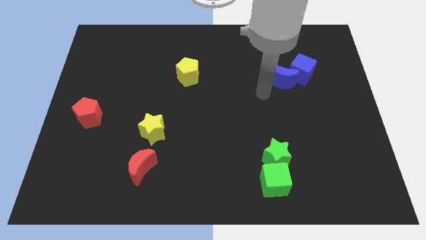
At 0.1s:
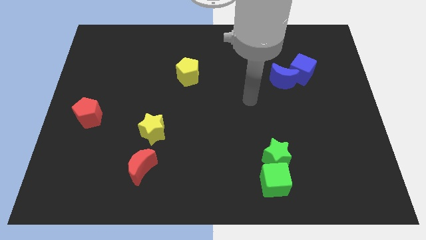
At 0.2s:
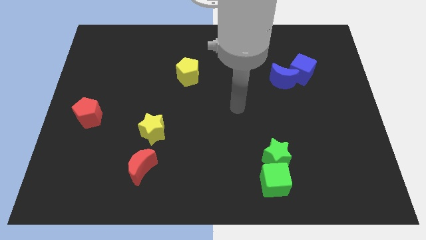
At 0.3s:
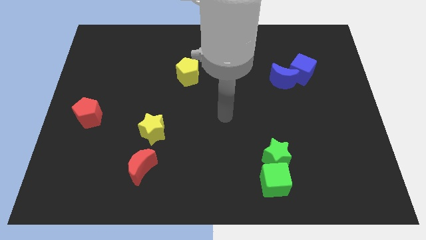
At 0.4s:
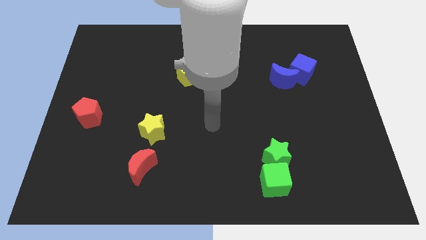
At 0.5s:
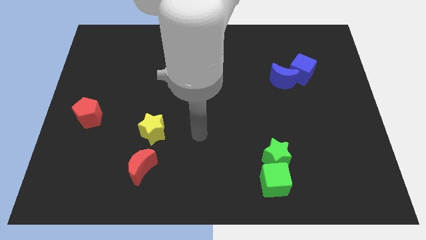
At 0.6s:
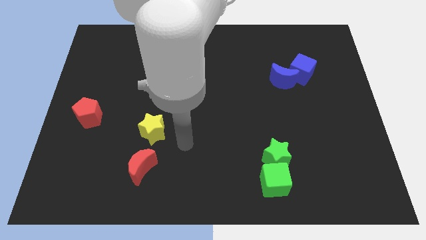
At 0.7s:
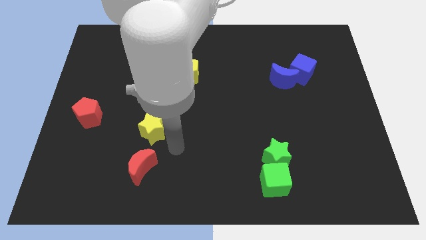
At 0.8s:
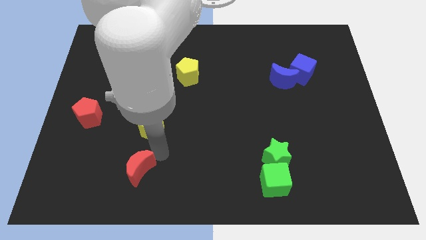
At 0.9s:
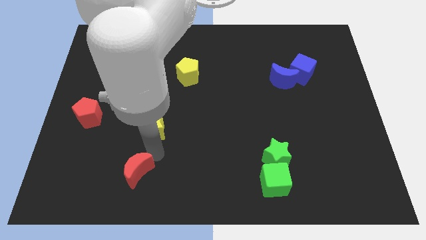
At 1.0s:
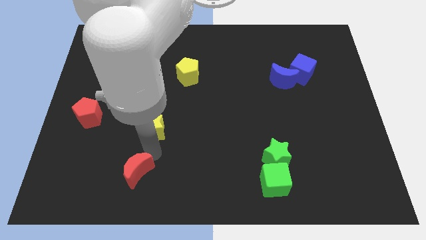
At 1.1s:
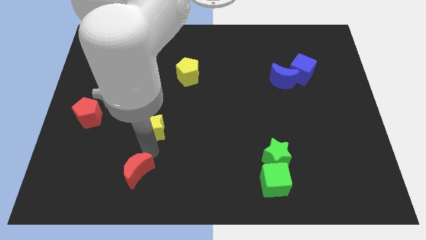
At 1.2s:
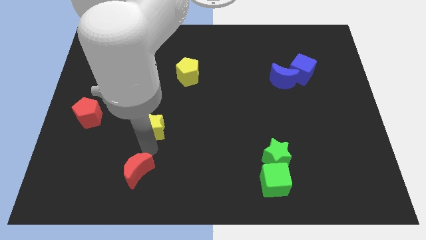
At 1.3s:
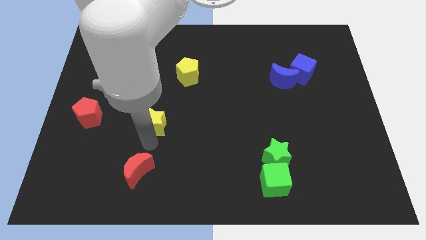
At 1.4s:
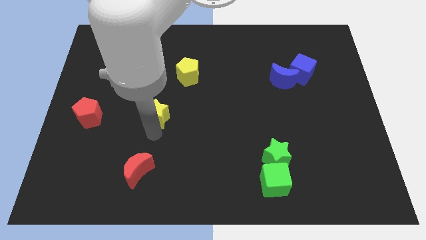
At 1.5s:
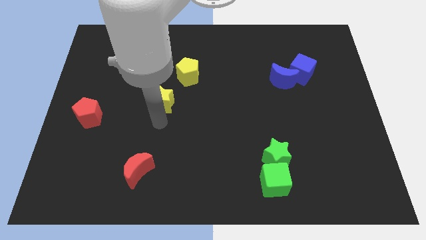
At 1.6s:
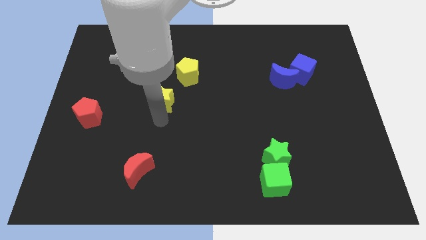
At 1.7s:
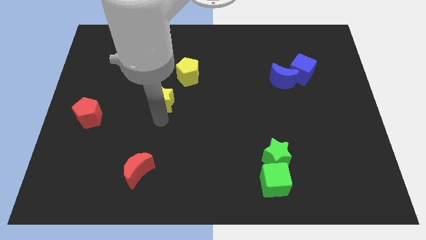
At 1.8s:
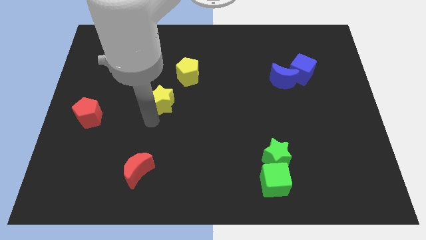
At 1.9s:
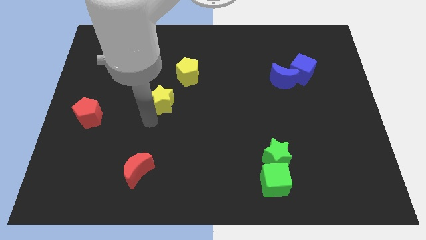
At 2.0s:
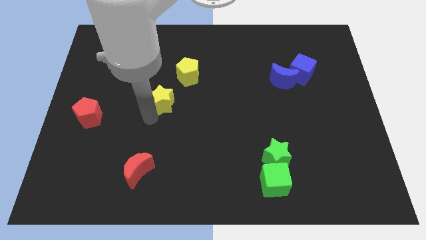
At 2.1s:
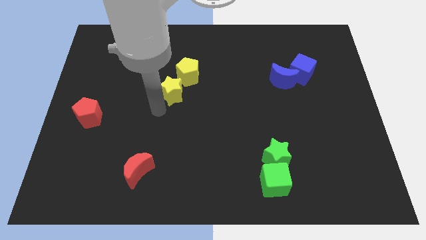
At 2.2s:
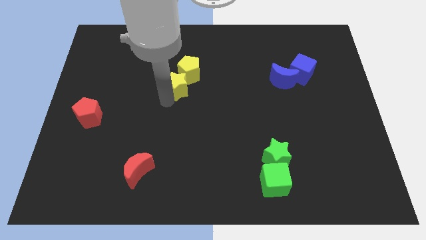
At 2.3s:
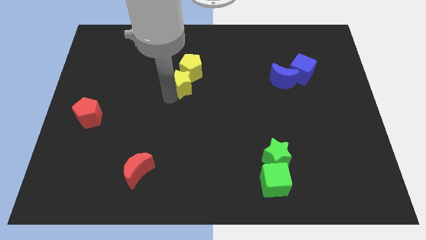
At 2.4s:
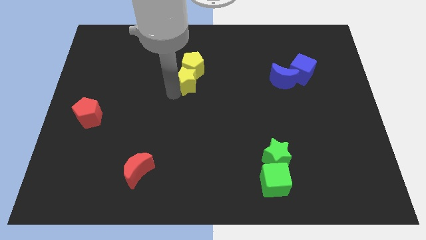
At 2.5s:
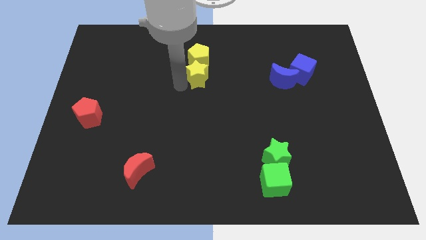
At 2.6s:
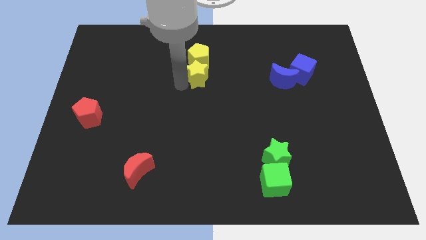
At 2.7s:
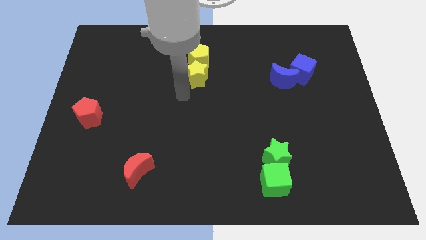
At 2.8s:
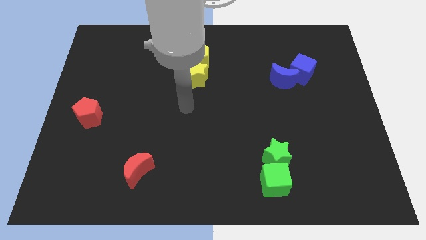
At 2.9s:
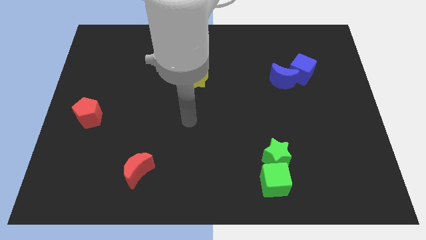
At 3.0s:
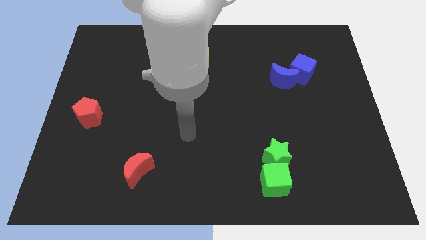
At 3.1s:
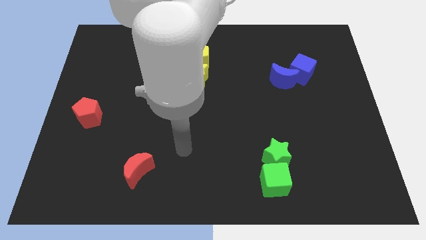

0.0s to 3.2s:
push the yellow star below the yellow pentagon

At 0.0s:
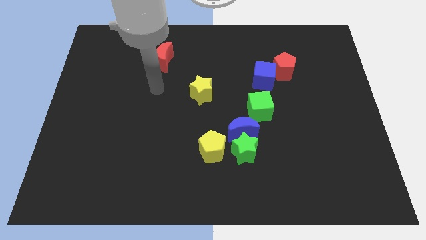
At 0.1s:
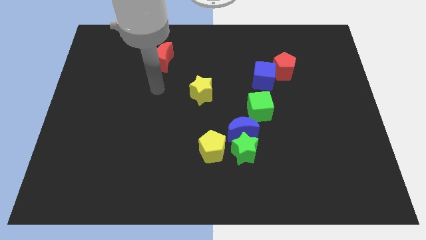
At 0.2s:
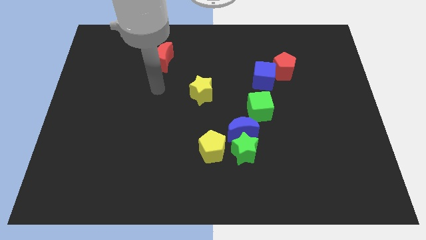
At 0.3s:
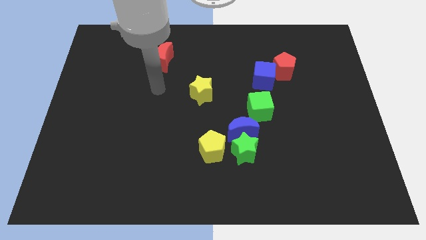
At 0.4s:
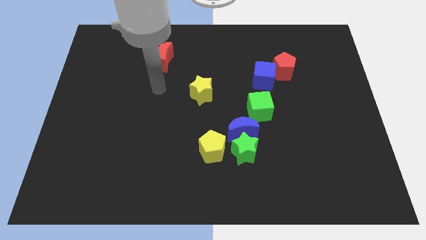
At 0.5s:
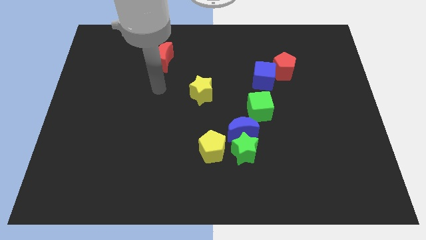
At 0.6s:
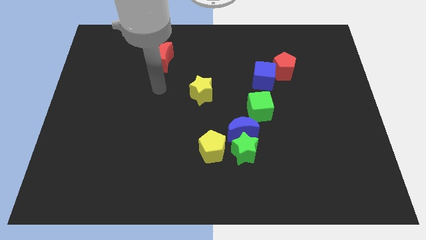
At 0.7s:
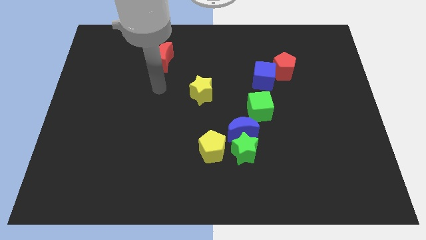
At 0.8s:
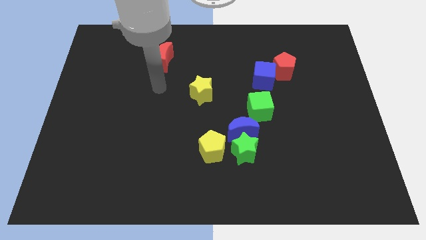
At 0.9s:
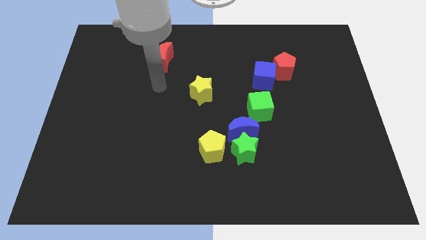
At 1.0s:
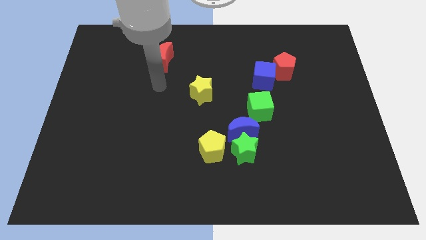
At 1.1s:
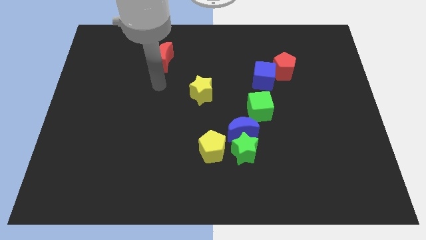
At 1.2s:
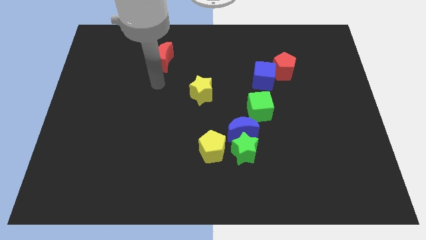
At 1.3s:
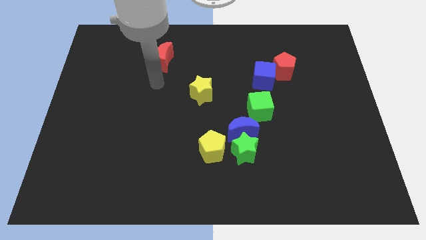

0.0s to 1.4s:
move your arm slightly to the top

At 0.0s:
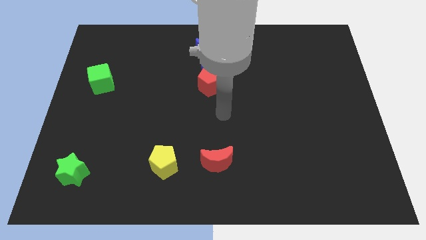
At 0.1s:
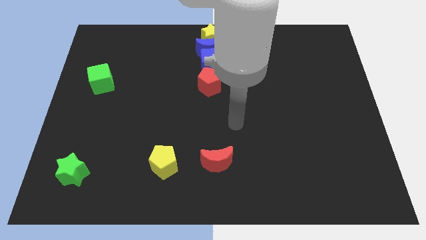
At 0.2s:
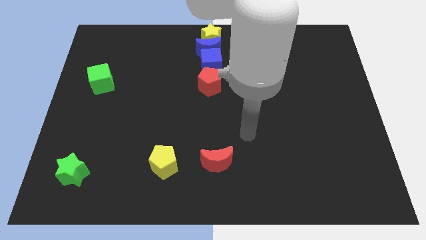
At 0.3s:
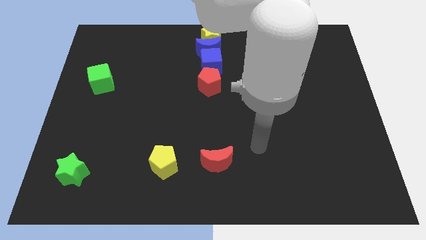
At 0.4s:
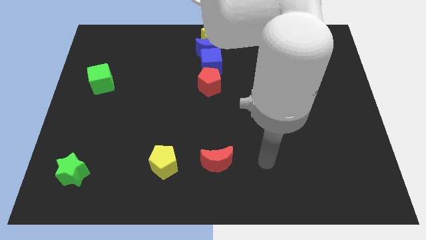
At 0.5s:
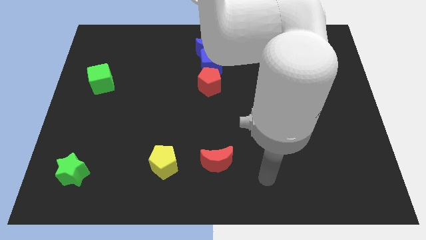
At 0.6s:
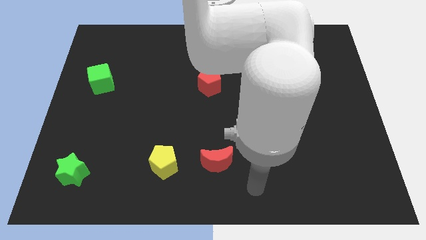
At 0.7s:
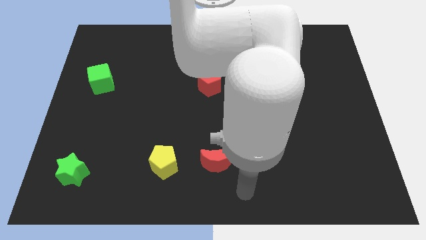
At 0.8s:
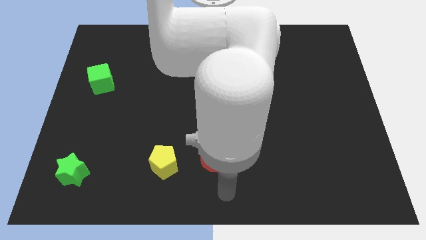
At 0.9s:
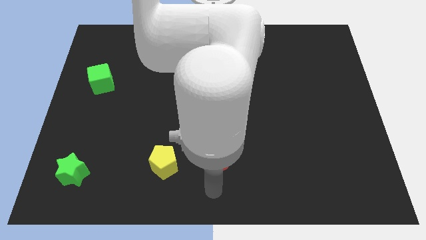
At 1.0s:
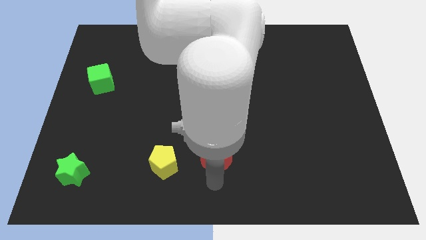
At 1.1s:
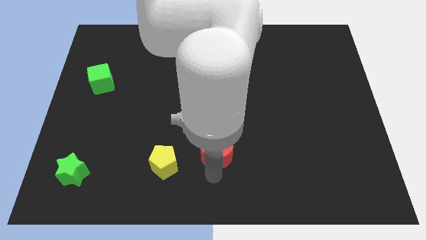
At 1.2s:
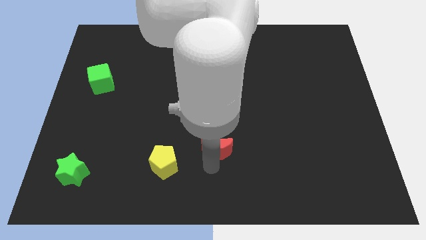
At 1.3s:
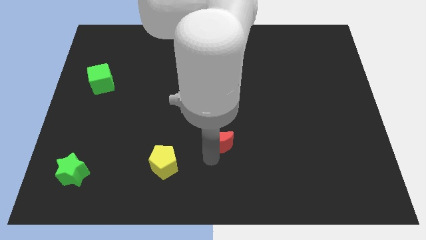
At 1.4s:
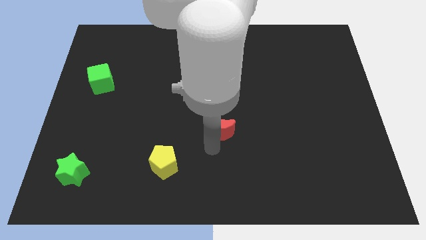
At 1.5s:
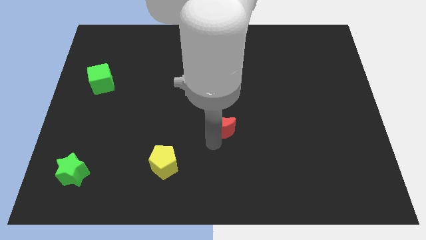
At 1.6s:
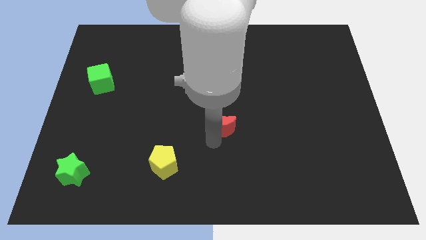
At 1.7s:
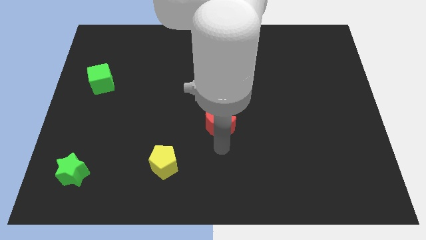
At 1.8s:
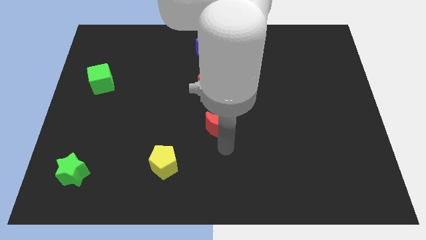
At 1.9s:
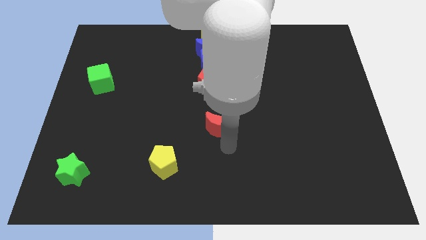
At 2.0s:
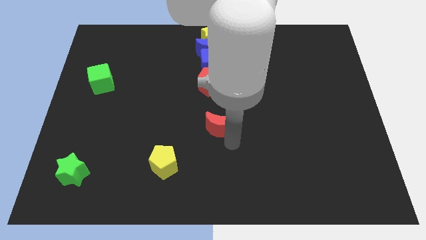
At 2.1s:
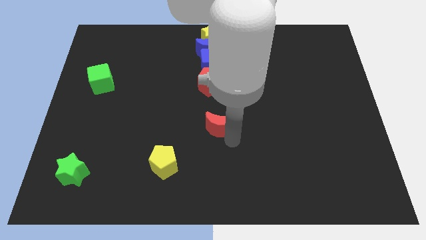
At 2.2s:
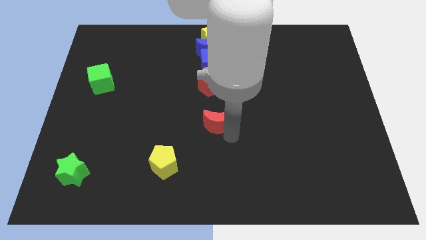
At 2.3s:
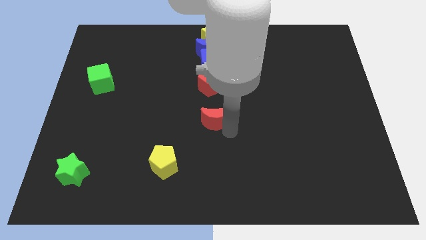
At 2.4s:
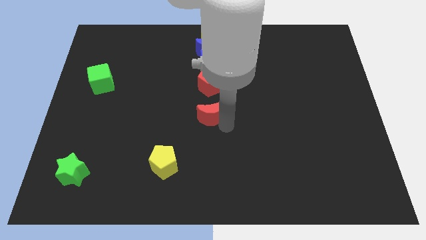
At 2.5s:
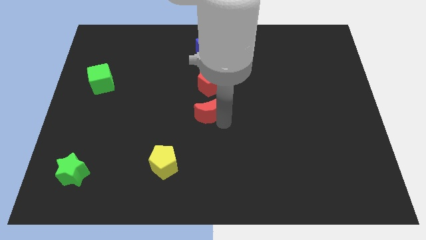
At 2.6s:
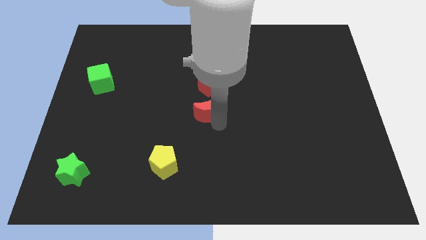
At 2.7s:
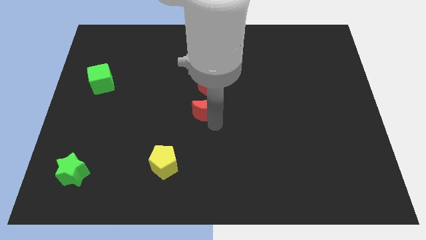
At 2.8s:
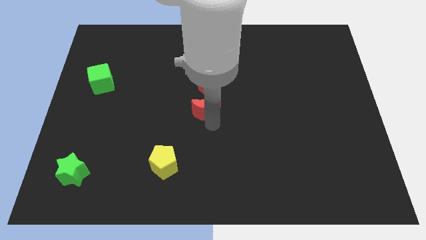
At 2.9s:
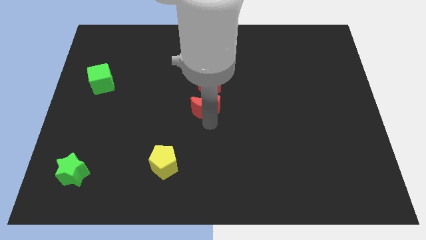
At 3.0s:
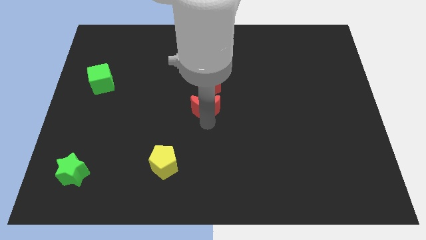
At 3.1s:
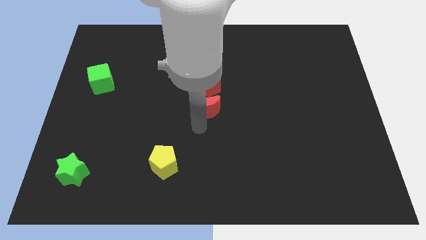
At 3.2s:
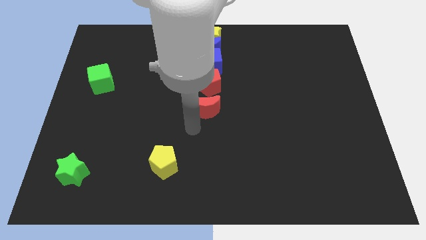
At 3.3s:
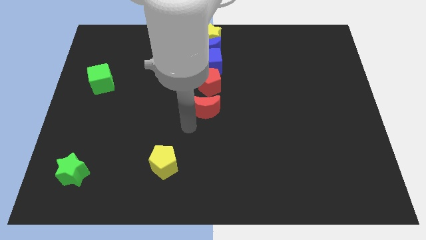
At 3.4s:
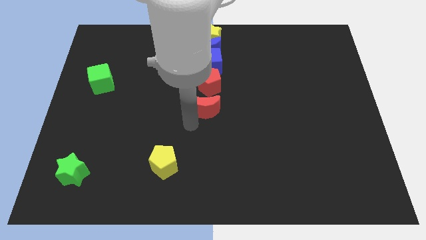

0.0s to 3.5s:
push red moon closer to the red pentagon

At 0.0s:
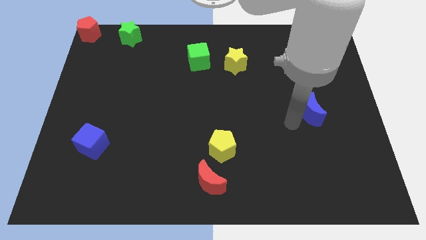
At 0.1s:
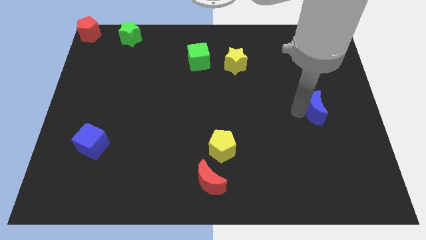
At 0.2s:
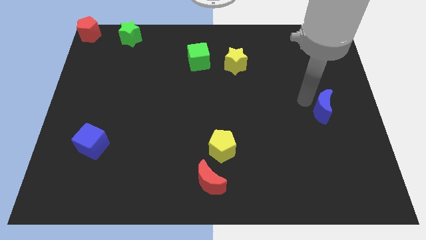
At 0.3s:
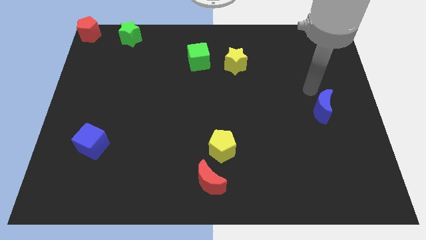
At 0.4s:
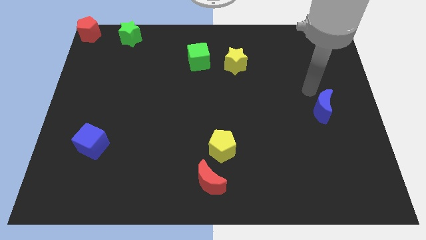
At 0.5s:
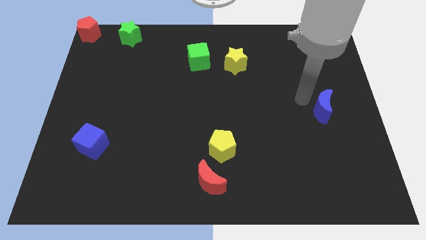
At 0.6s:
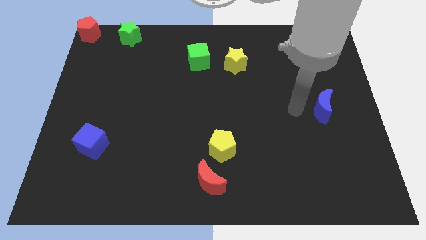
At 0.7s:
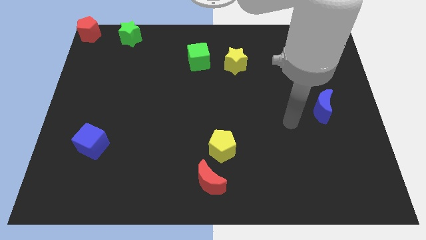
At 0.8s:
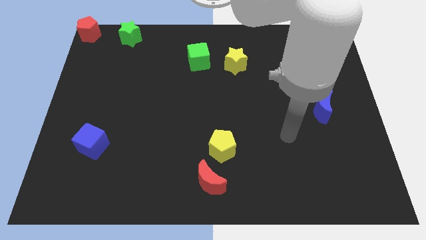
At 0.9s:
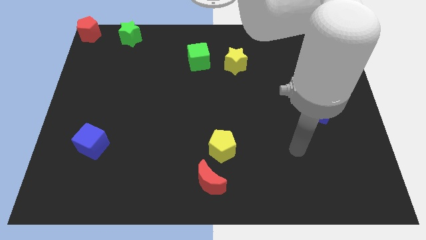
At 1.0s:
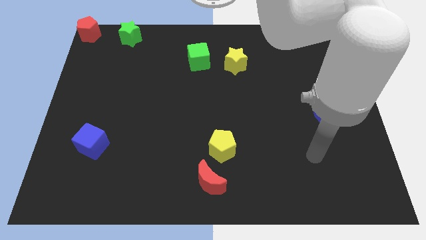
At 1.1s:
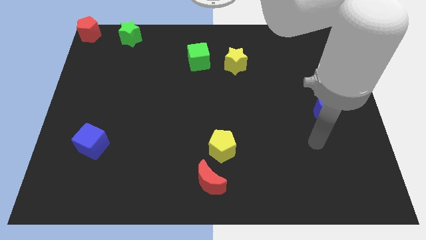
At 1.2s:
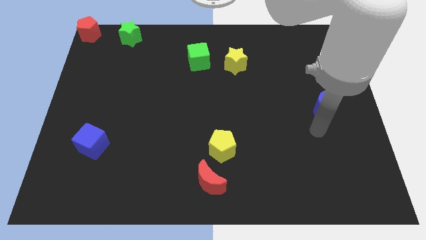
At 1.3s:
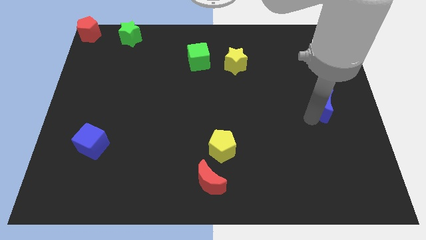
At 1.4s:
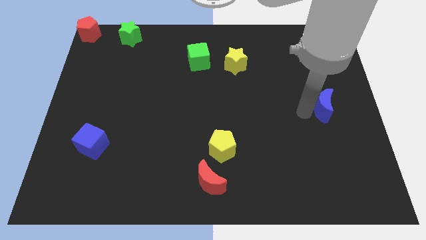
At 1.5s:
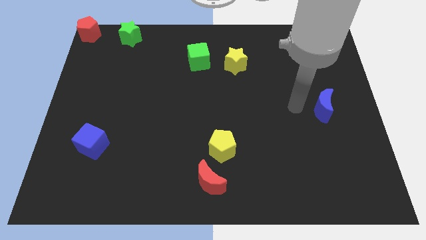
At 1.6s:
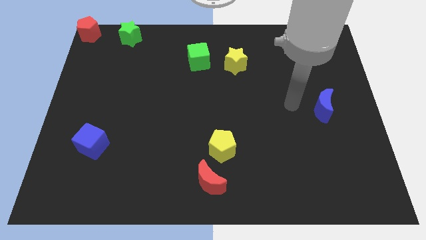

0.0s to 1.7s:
move the blue moon to the top side
